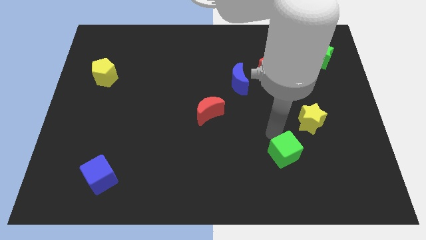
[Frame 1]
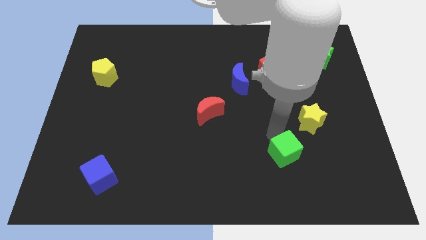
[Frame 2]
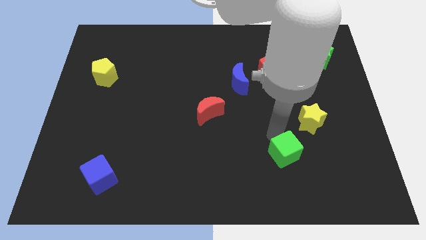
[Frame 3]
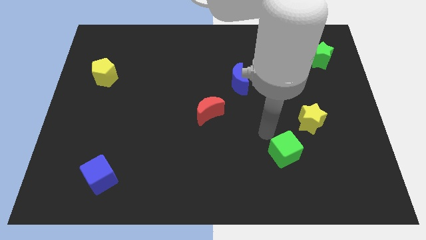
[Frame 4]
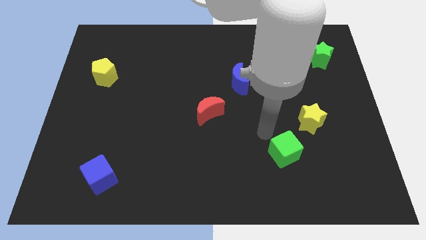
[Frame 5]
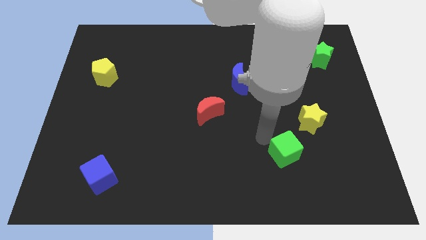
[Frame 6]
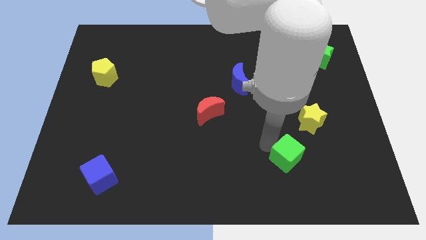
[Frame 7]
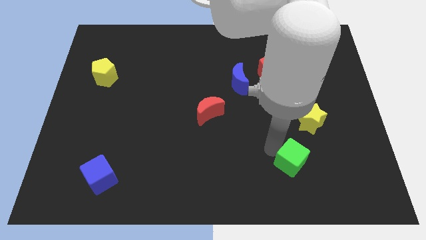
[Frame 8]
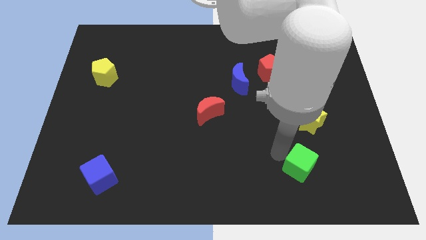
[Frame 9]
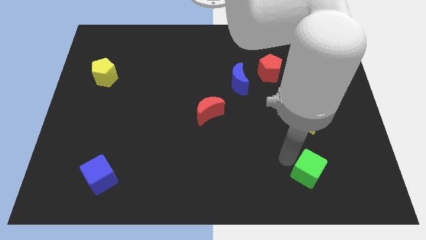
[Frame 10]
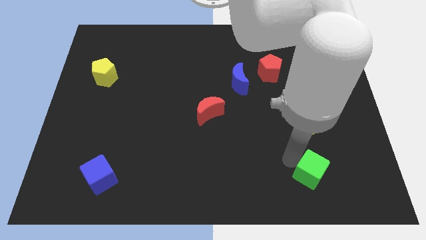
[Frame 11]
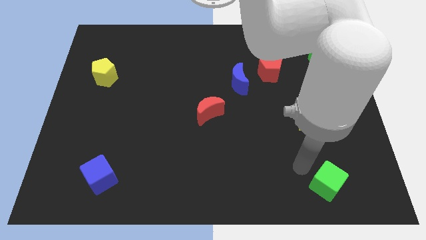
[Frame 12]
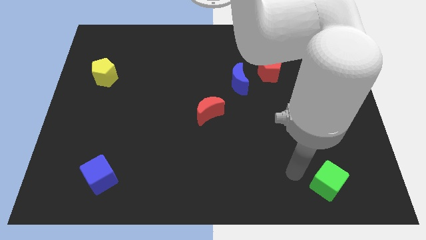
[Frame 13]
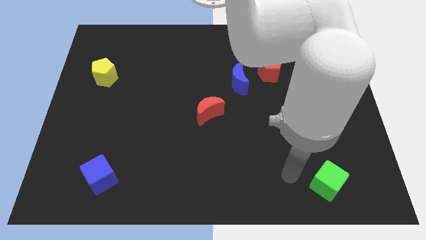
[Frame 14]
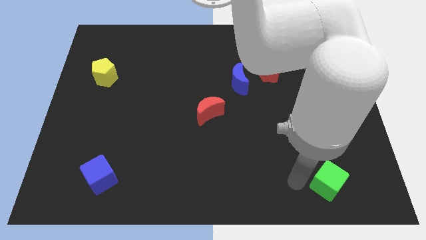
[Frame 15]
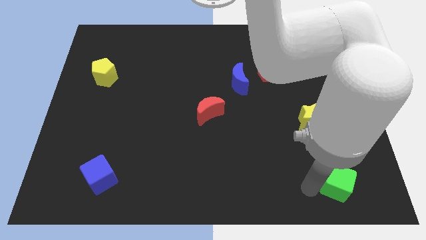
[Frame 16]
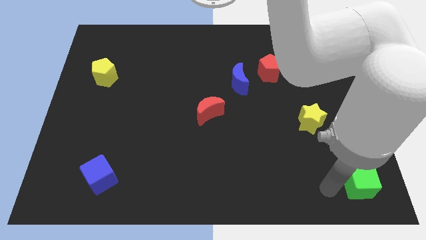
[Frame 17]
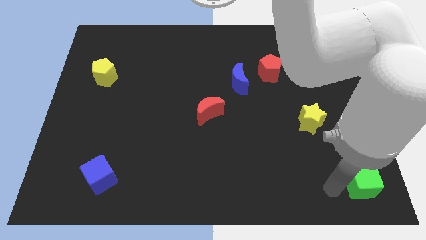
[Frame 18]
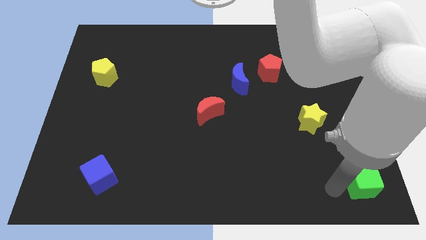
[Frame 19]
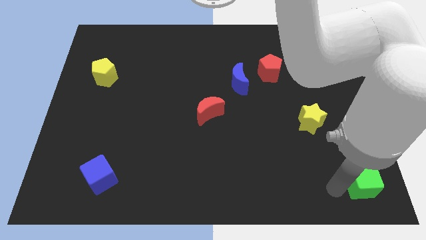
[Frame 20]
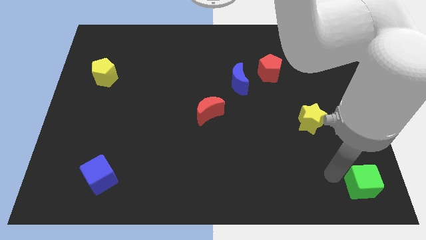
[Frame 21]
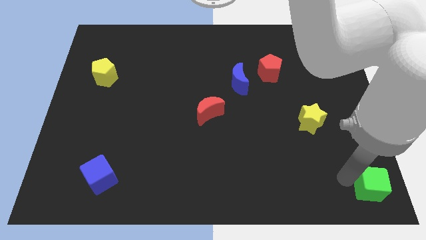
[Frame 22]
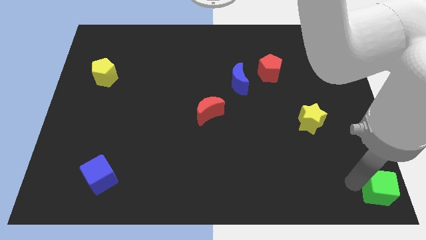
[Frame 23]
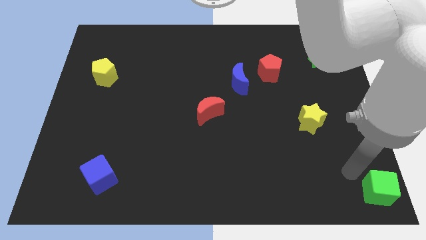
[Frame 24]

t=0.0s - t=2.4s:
place the green cube to the left bottom of the board

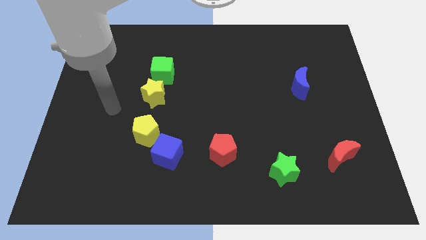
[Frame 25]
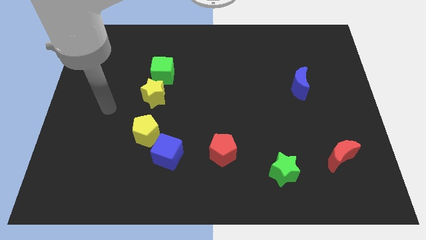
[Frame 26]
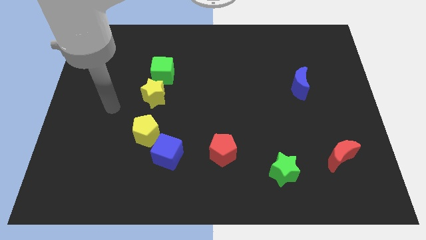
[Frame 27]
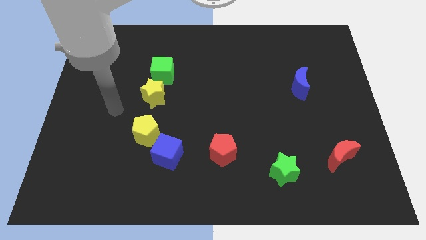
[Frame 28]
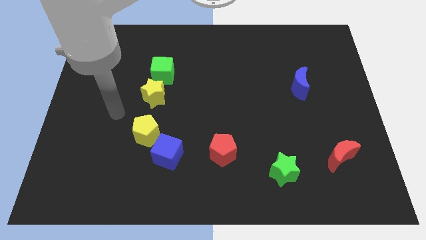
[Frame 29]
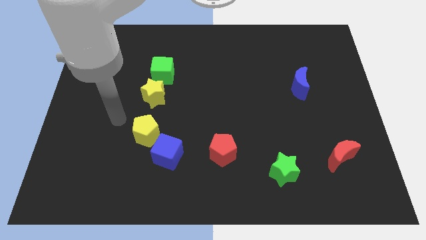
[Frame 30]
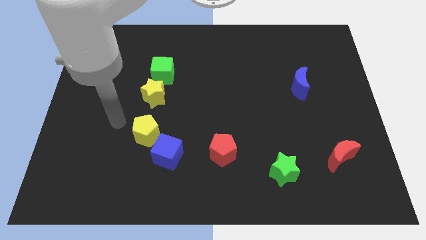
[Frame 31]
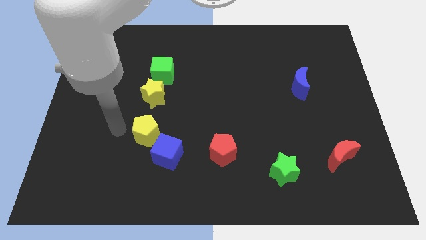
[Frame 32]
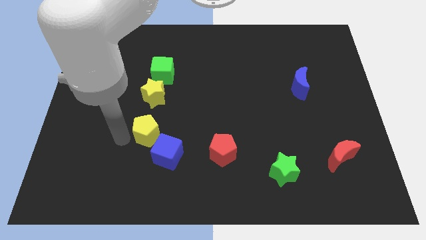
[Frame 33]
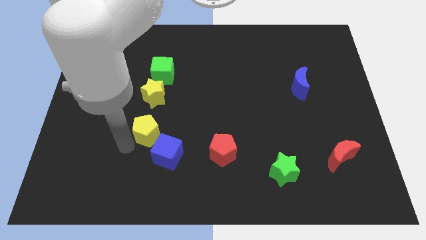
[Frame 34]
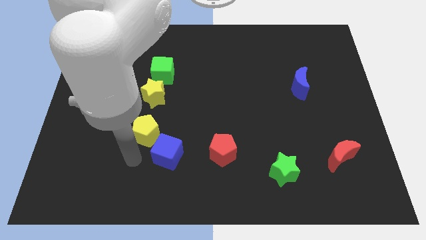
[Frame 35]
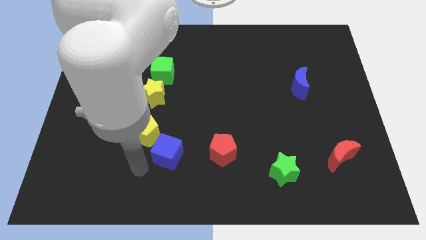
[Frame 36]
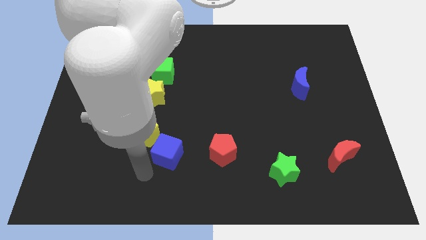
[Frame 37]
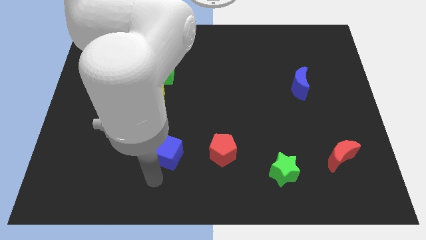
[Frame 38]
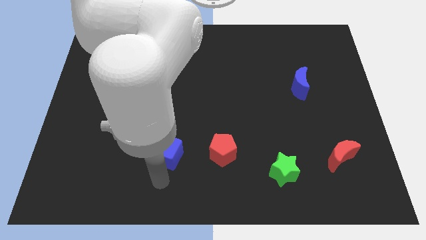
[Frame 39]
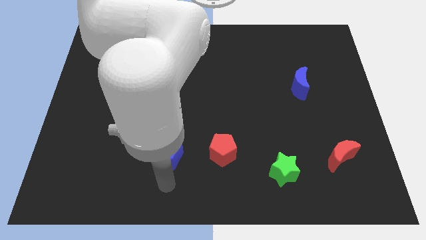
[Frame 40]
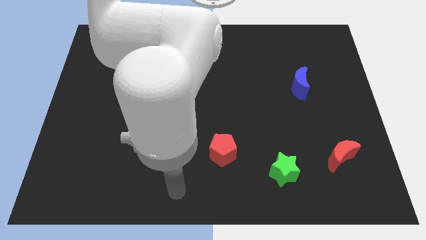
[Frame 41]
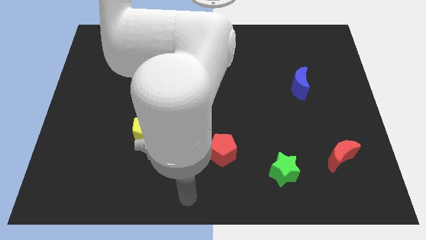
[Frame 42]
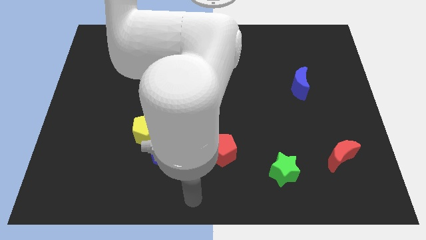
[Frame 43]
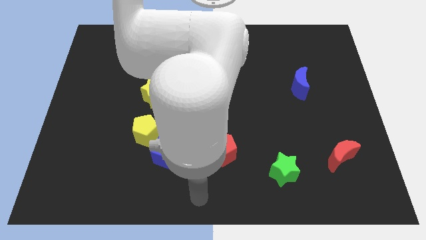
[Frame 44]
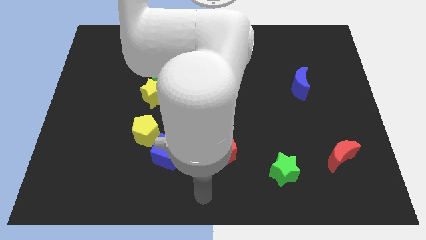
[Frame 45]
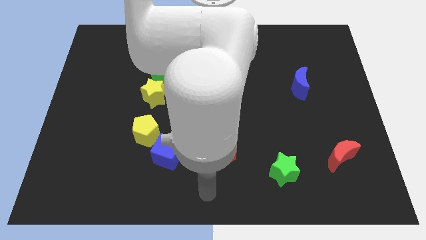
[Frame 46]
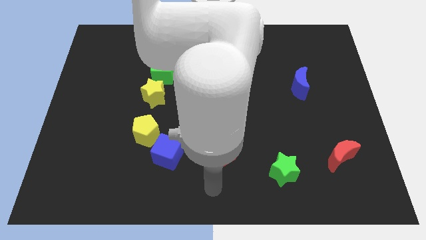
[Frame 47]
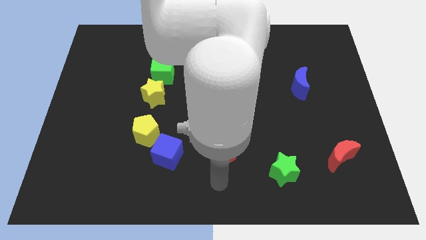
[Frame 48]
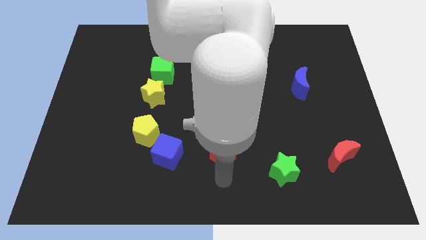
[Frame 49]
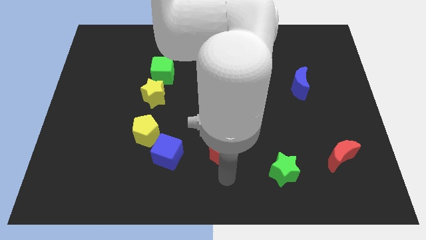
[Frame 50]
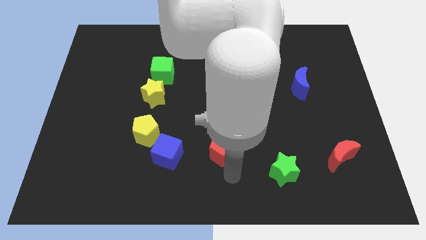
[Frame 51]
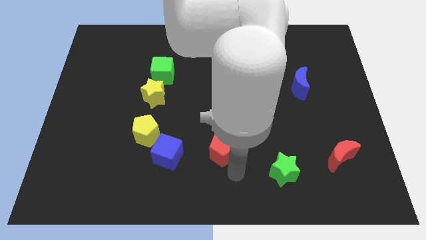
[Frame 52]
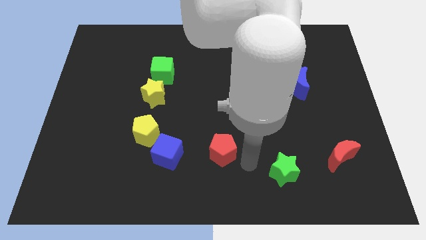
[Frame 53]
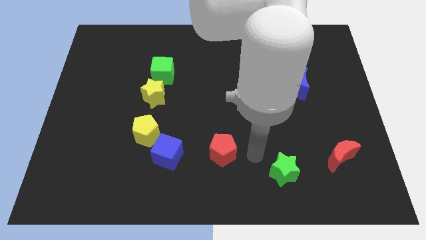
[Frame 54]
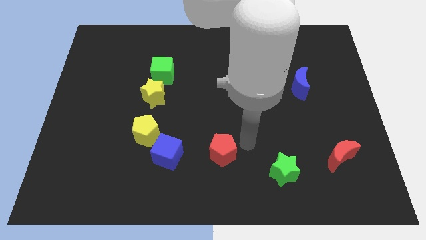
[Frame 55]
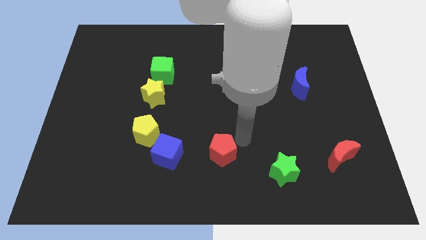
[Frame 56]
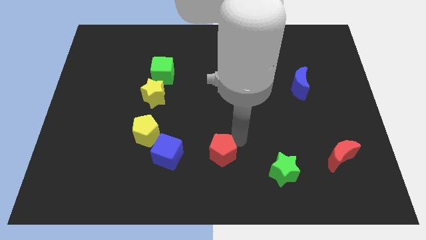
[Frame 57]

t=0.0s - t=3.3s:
move your arm towards the red pentagon

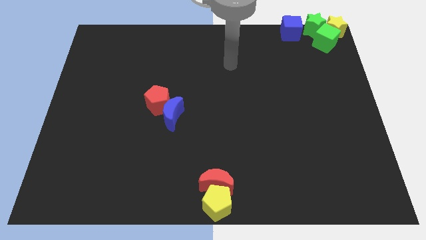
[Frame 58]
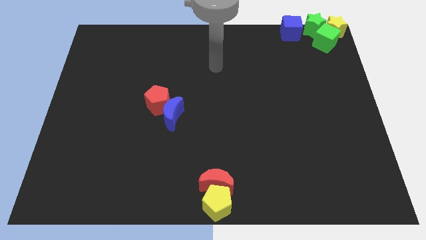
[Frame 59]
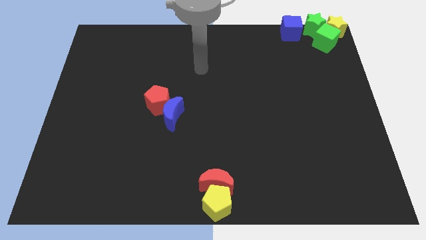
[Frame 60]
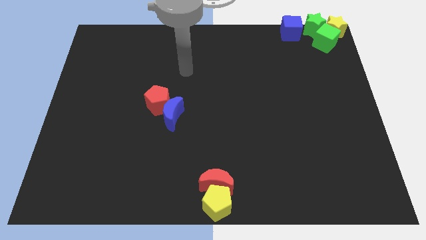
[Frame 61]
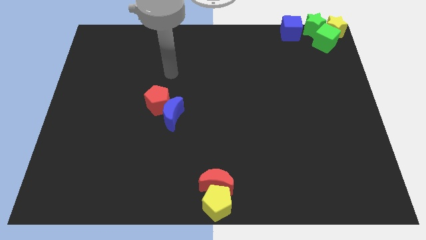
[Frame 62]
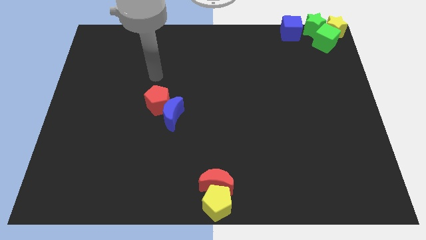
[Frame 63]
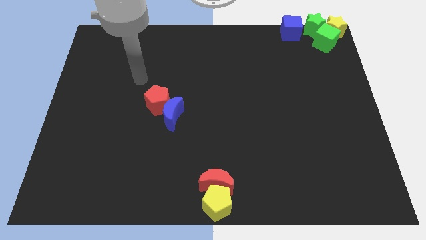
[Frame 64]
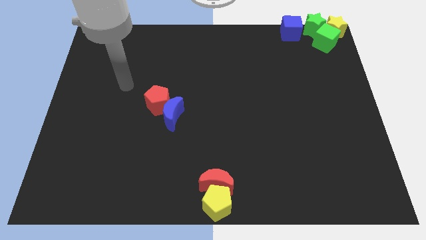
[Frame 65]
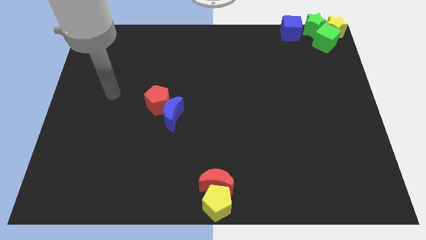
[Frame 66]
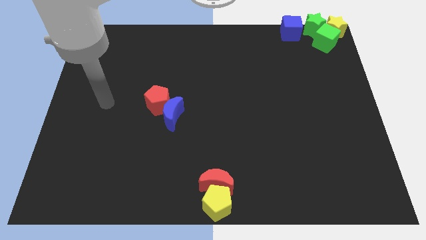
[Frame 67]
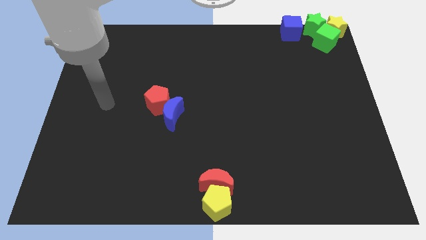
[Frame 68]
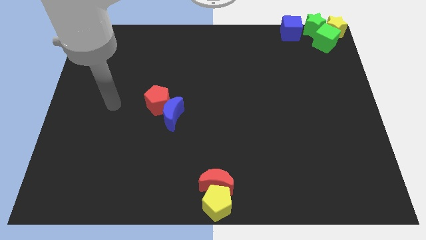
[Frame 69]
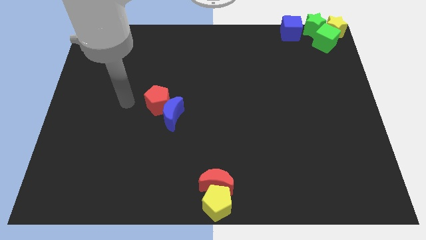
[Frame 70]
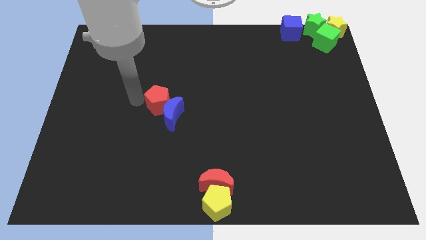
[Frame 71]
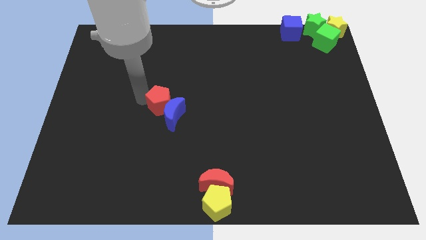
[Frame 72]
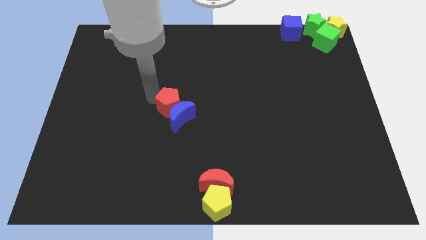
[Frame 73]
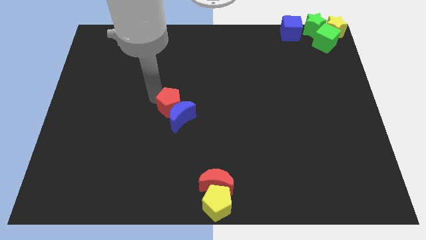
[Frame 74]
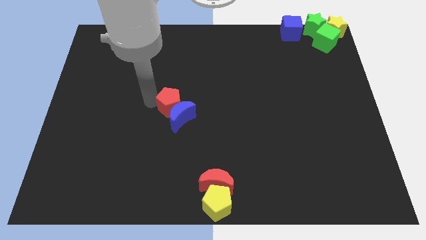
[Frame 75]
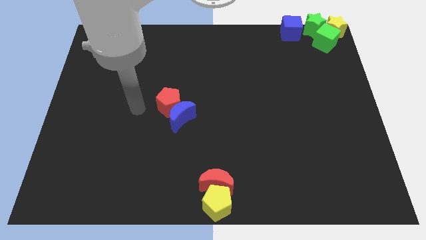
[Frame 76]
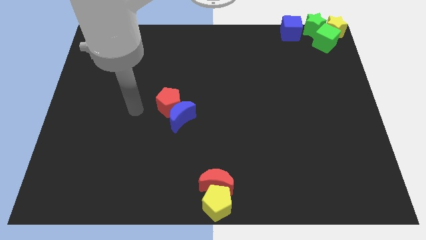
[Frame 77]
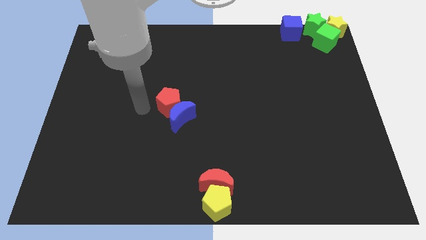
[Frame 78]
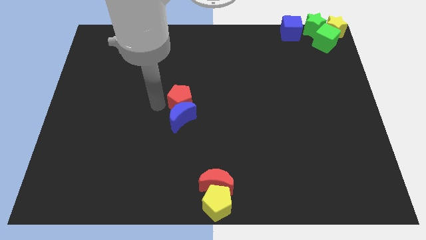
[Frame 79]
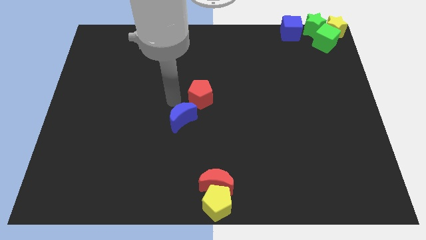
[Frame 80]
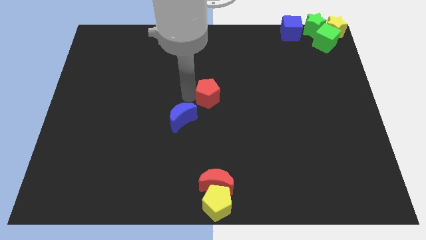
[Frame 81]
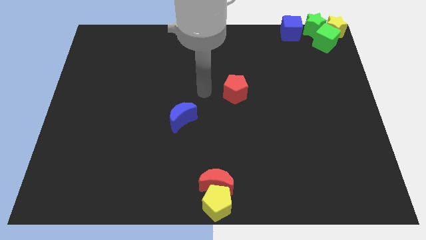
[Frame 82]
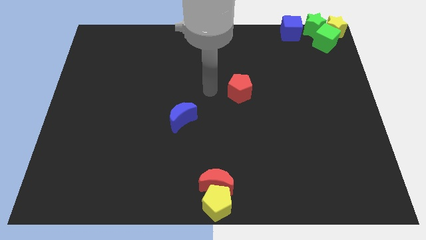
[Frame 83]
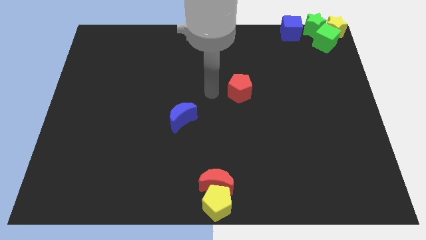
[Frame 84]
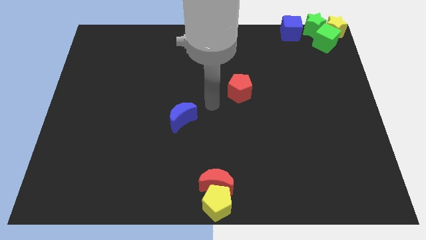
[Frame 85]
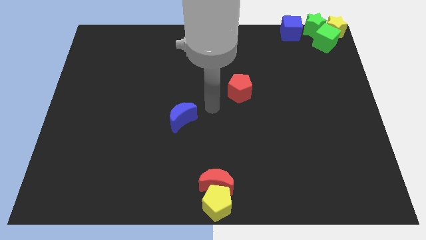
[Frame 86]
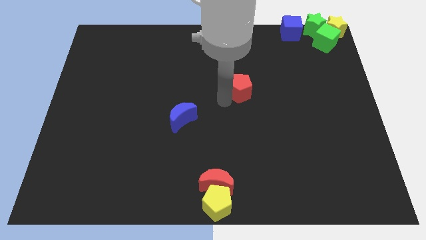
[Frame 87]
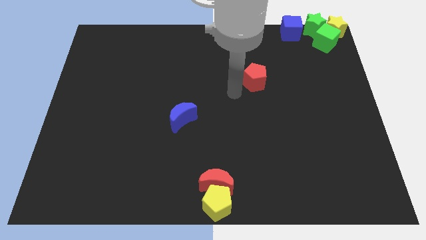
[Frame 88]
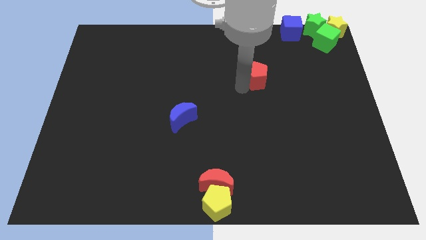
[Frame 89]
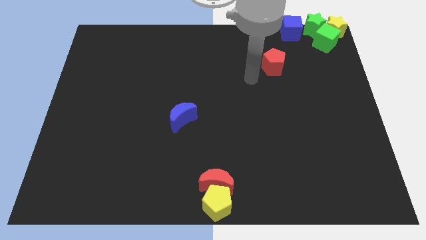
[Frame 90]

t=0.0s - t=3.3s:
place the red pentagon diagonally top right to blue moon

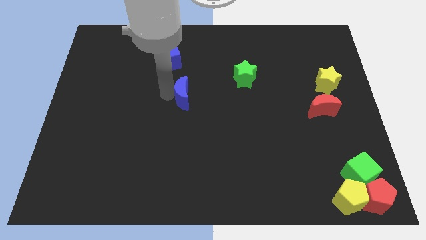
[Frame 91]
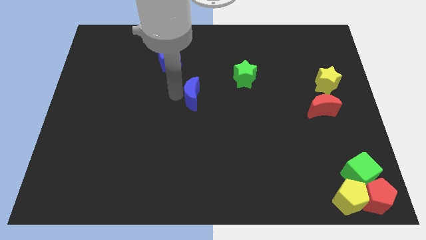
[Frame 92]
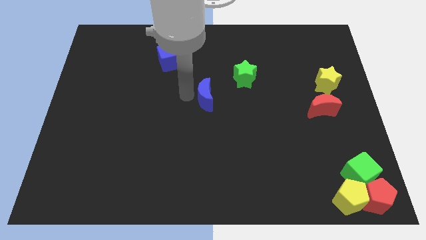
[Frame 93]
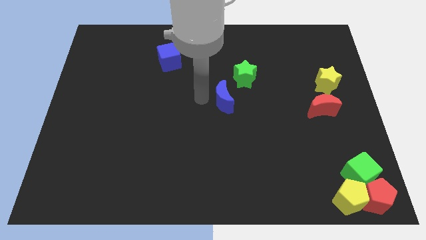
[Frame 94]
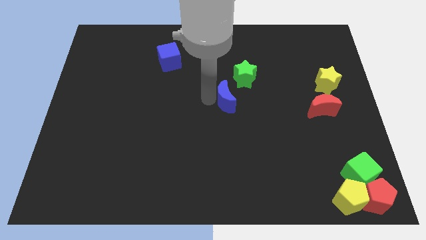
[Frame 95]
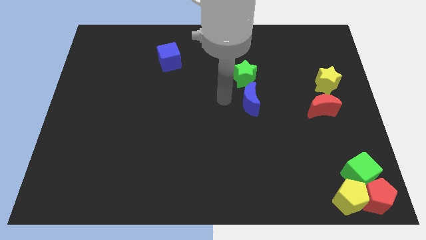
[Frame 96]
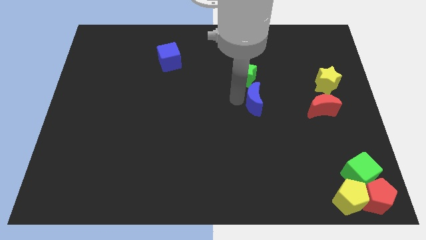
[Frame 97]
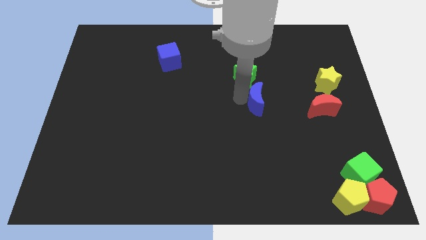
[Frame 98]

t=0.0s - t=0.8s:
place blue moon to the bottom of green star
